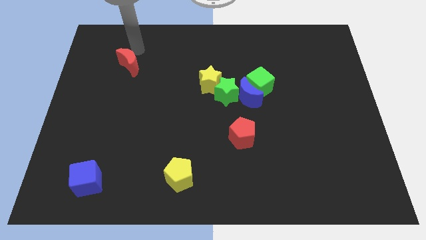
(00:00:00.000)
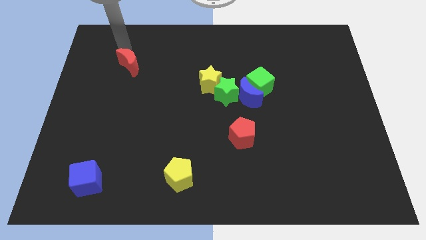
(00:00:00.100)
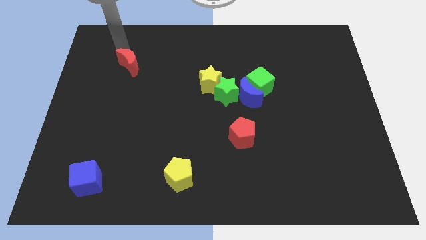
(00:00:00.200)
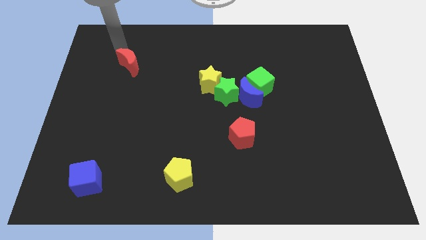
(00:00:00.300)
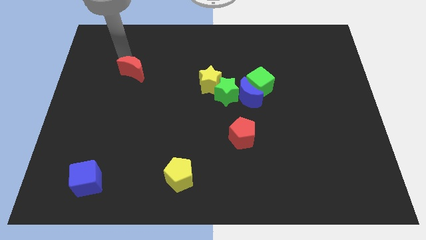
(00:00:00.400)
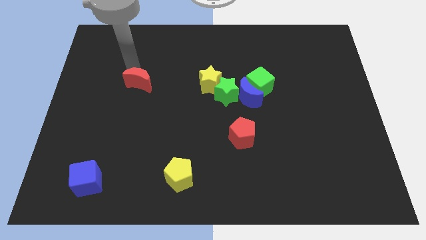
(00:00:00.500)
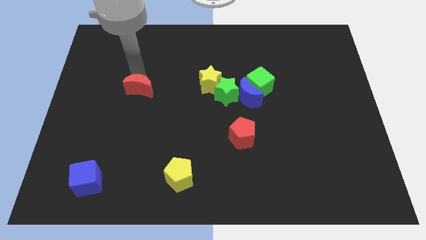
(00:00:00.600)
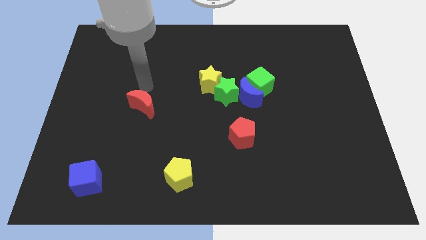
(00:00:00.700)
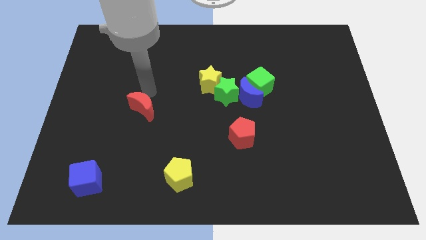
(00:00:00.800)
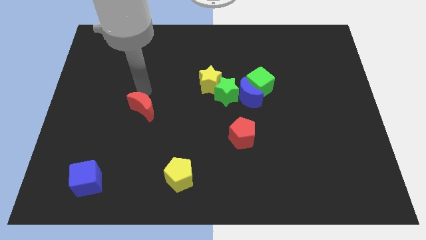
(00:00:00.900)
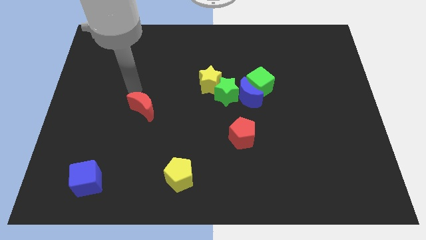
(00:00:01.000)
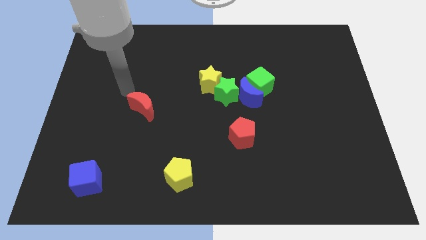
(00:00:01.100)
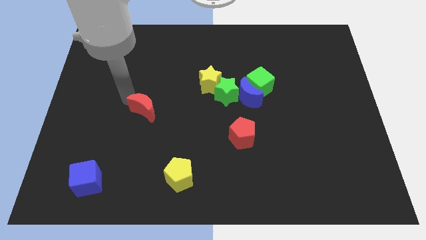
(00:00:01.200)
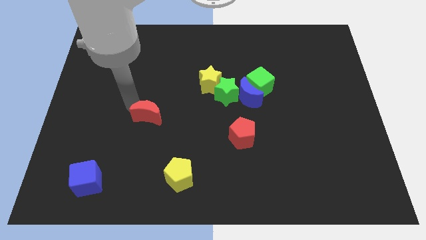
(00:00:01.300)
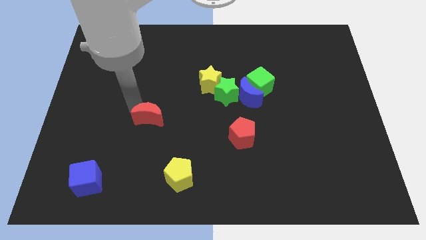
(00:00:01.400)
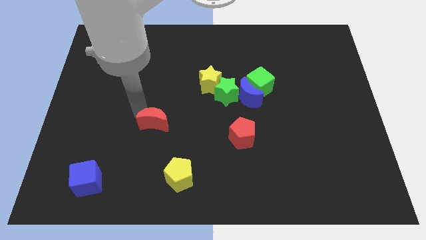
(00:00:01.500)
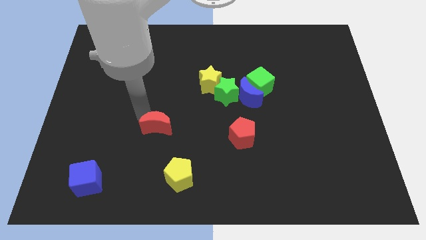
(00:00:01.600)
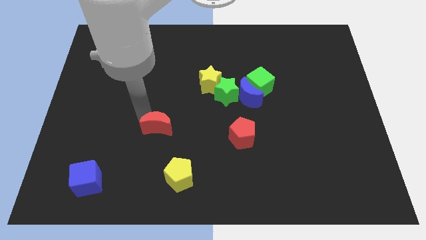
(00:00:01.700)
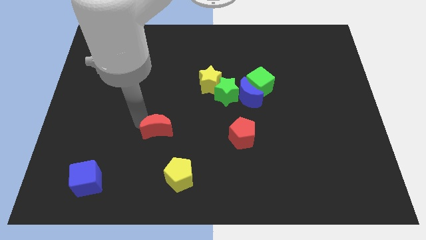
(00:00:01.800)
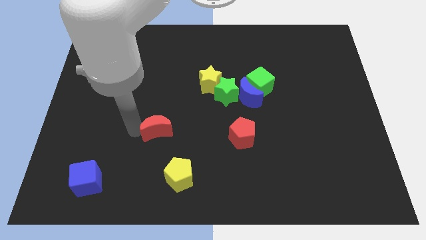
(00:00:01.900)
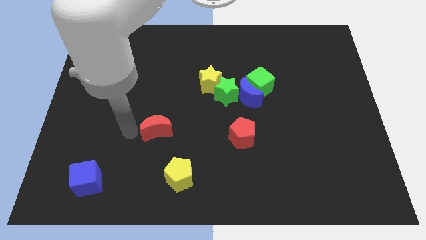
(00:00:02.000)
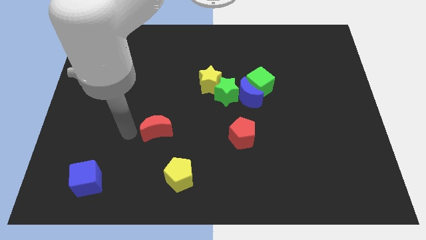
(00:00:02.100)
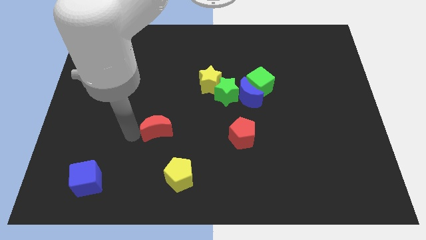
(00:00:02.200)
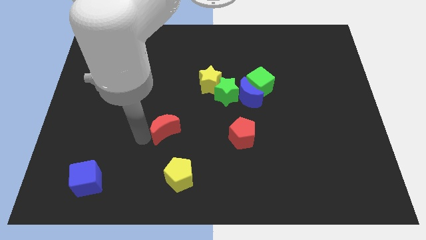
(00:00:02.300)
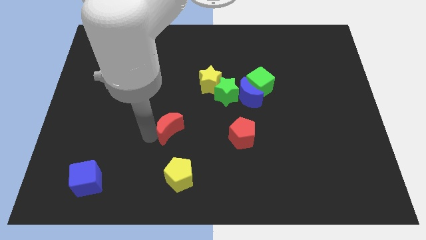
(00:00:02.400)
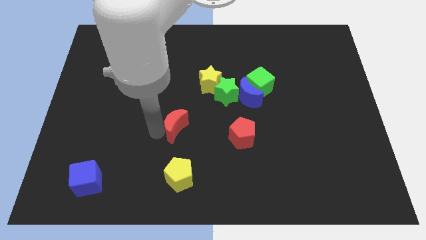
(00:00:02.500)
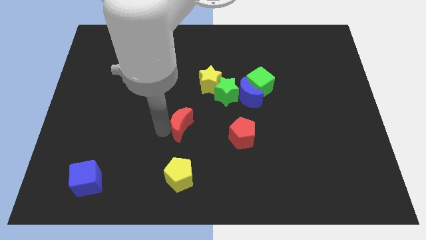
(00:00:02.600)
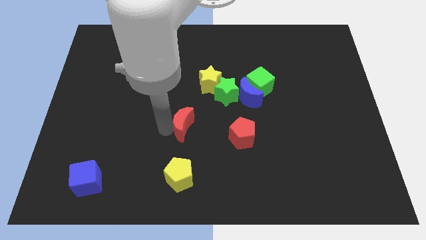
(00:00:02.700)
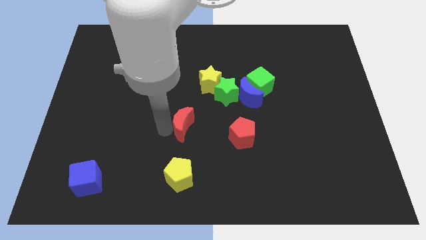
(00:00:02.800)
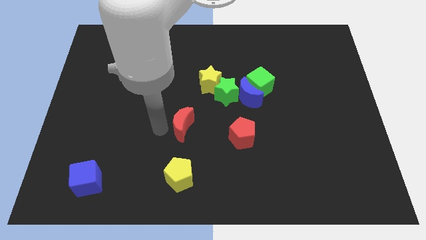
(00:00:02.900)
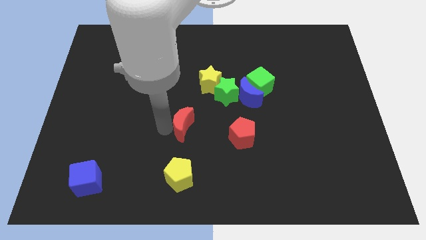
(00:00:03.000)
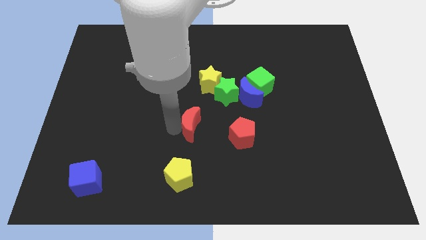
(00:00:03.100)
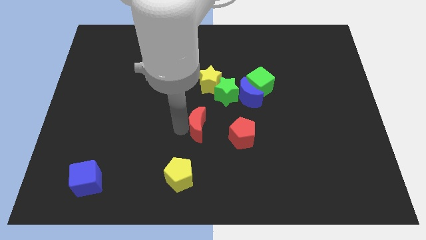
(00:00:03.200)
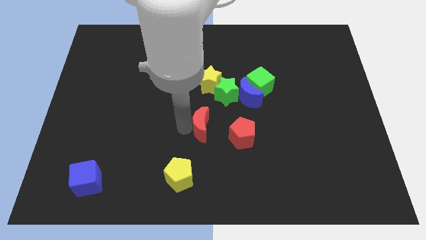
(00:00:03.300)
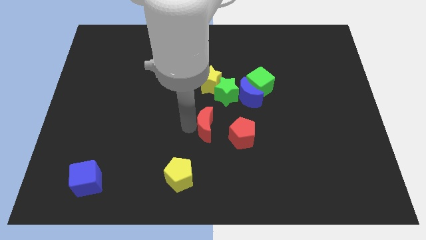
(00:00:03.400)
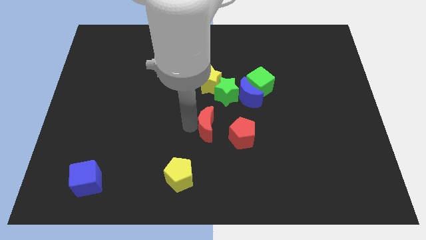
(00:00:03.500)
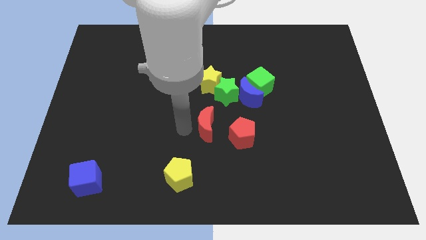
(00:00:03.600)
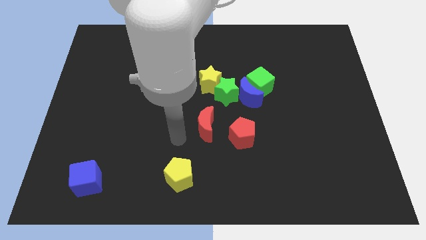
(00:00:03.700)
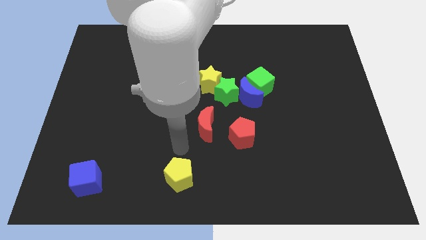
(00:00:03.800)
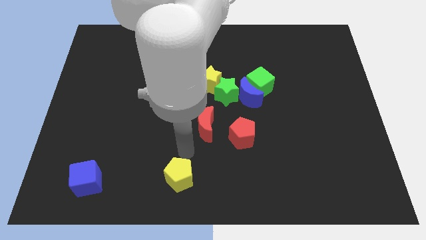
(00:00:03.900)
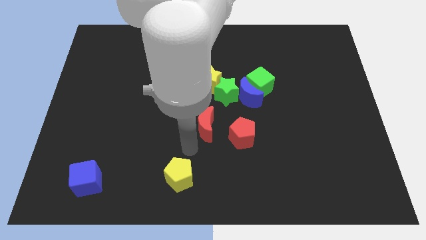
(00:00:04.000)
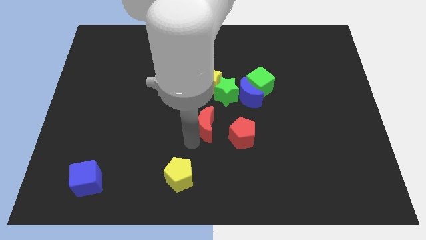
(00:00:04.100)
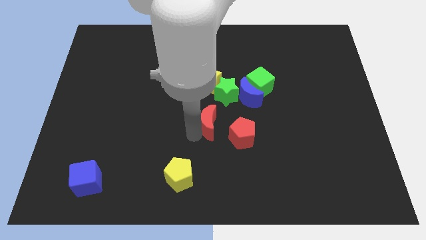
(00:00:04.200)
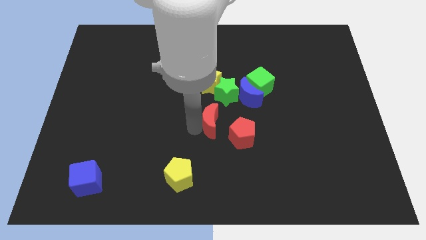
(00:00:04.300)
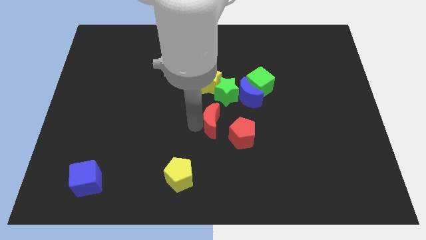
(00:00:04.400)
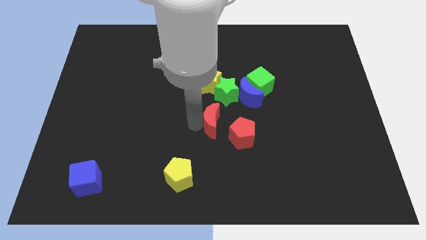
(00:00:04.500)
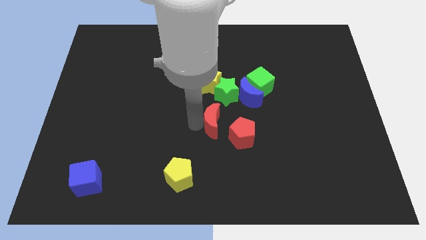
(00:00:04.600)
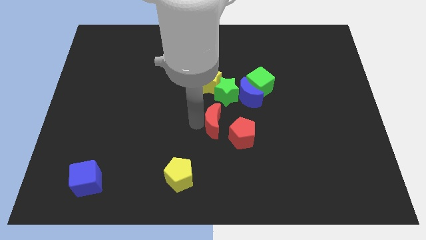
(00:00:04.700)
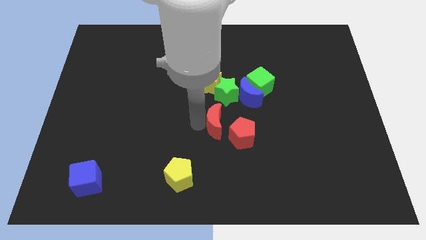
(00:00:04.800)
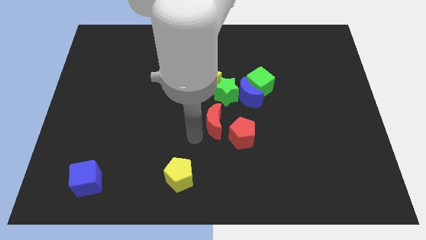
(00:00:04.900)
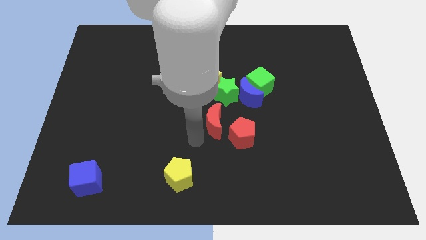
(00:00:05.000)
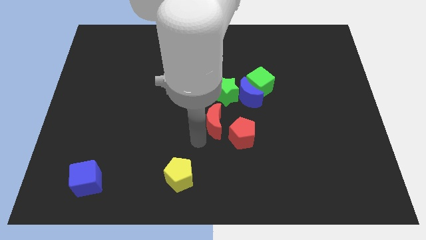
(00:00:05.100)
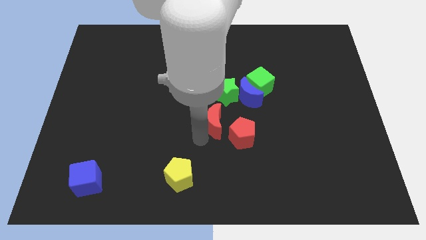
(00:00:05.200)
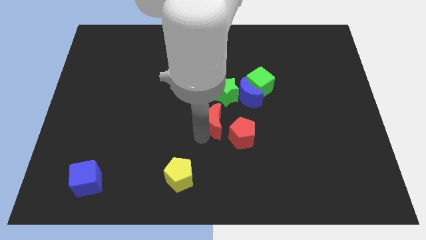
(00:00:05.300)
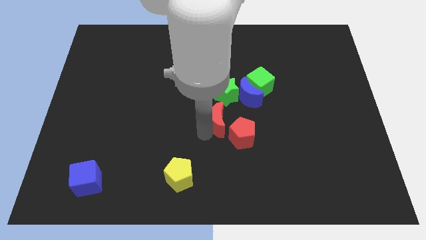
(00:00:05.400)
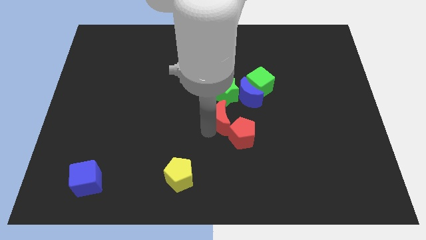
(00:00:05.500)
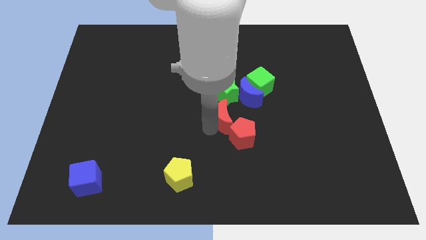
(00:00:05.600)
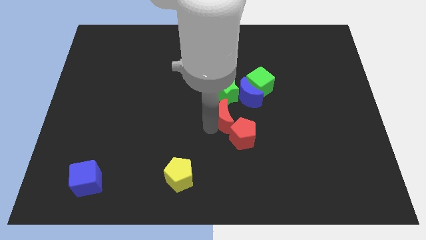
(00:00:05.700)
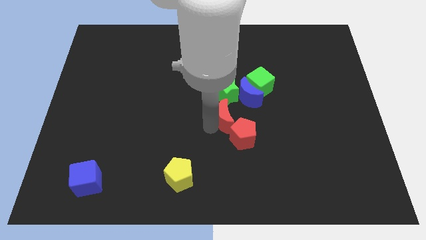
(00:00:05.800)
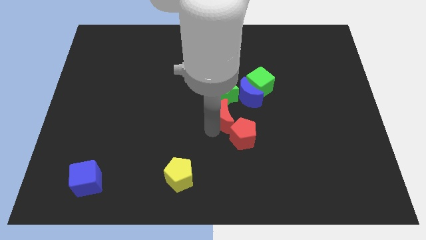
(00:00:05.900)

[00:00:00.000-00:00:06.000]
drag red moon between green star and red pentagon

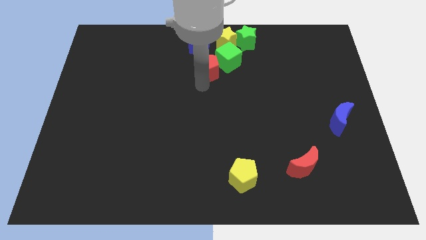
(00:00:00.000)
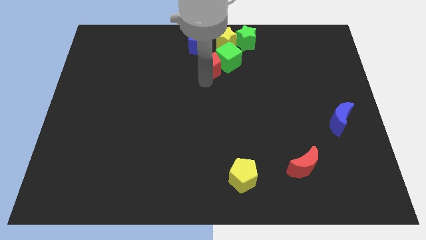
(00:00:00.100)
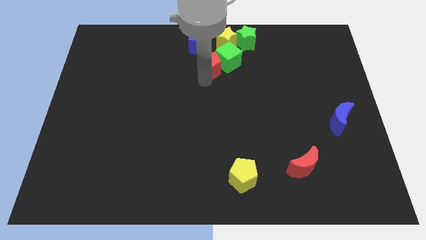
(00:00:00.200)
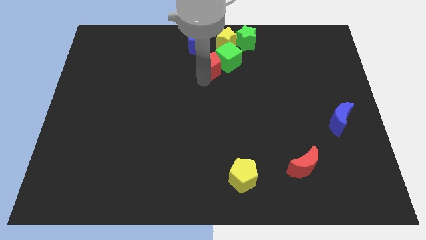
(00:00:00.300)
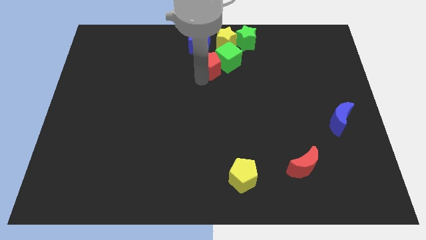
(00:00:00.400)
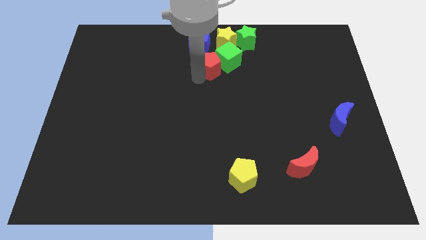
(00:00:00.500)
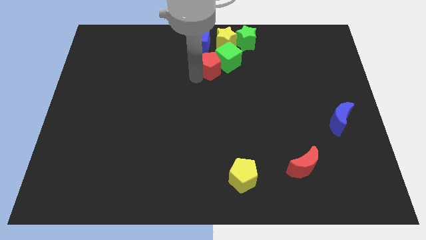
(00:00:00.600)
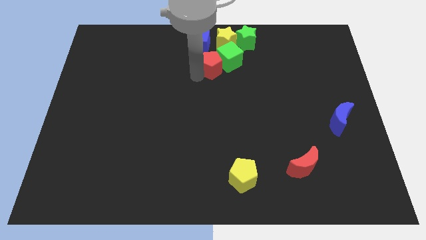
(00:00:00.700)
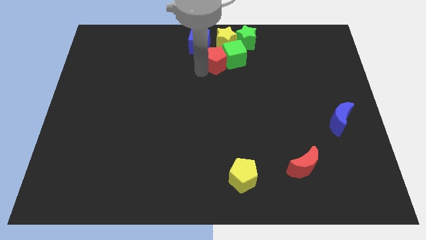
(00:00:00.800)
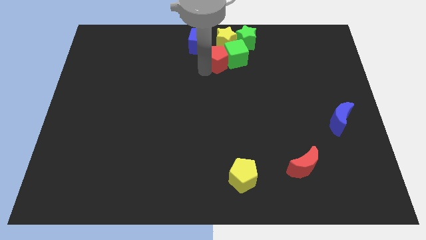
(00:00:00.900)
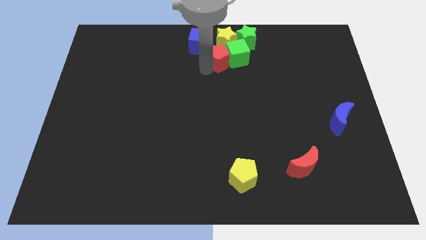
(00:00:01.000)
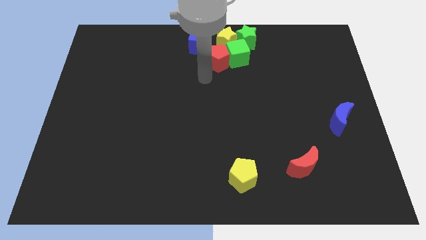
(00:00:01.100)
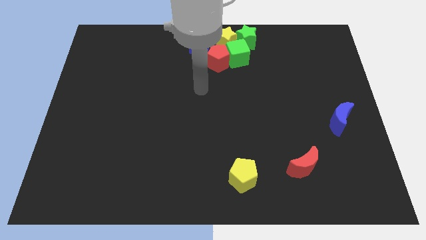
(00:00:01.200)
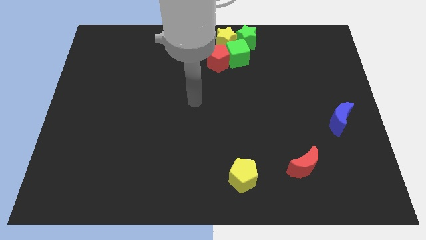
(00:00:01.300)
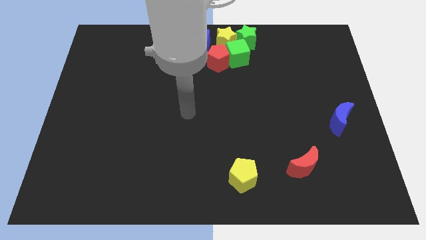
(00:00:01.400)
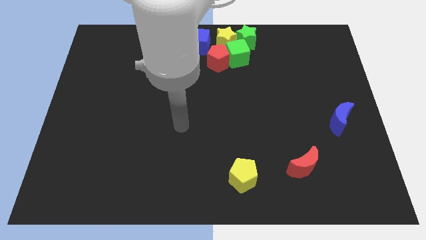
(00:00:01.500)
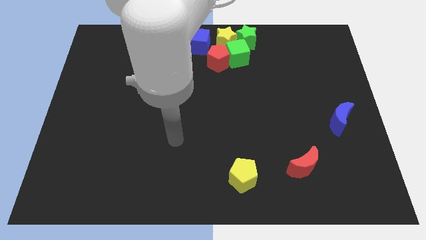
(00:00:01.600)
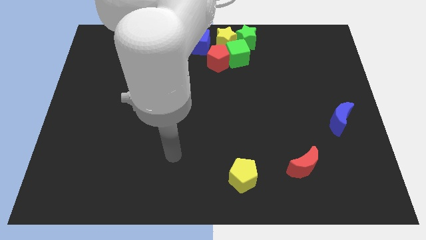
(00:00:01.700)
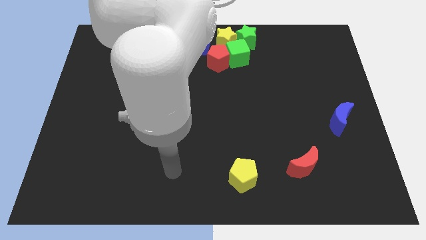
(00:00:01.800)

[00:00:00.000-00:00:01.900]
place the red pentagon left to the green cube

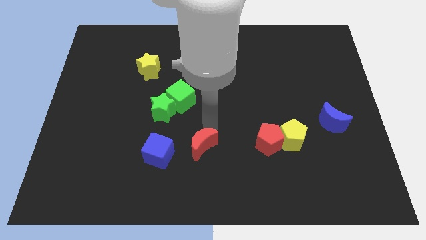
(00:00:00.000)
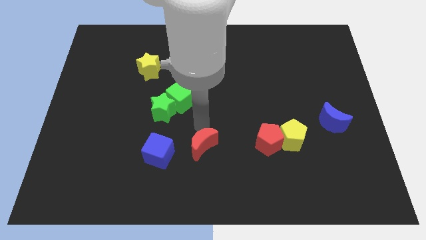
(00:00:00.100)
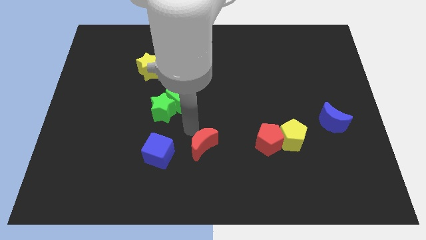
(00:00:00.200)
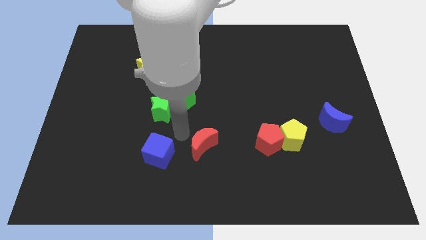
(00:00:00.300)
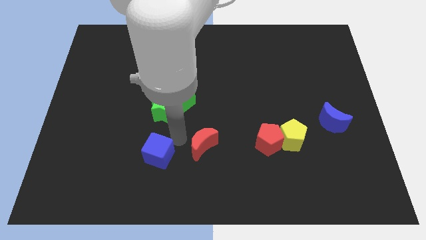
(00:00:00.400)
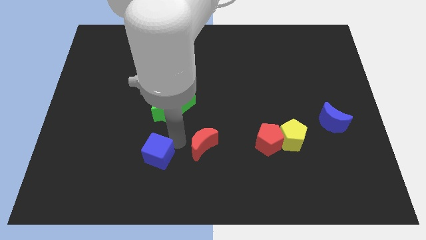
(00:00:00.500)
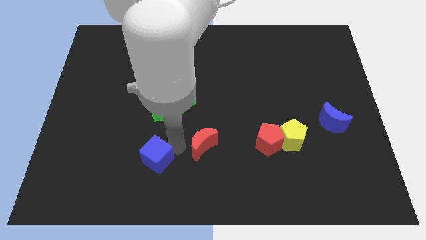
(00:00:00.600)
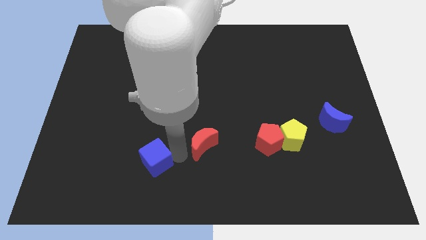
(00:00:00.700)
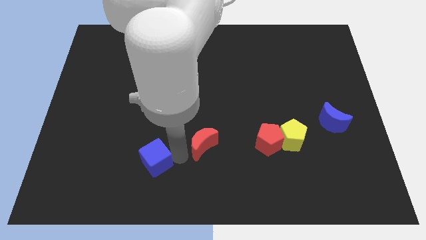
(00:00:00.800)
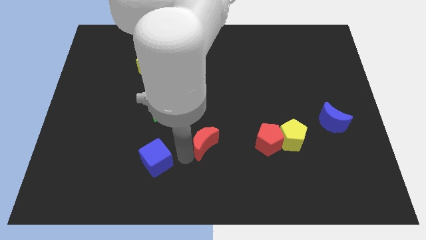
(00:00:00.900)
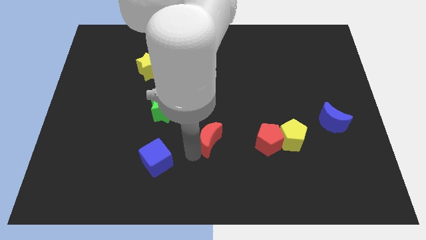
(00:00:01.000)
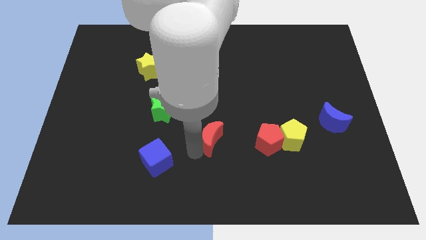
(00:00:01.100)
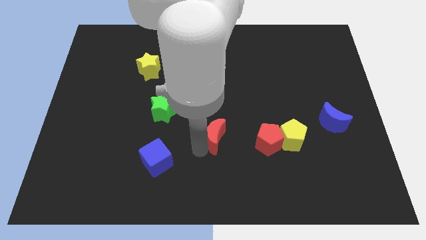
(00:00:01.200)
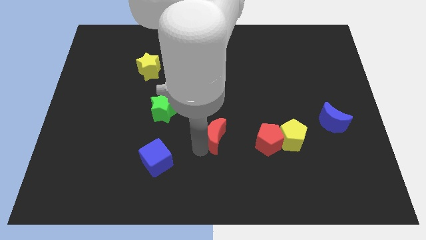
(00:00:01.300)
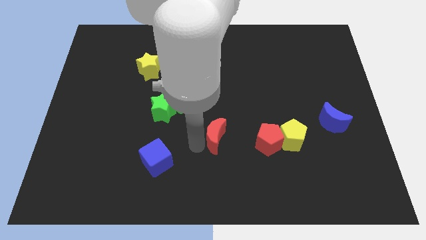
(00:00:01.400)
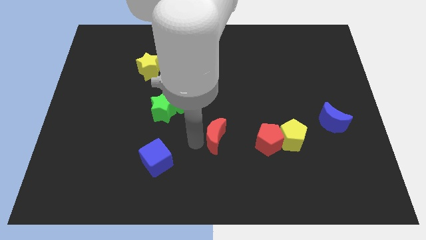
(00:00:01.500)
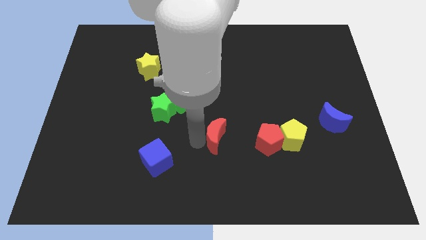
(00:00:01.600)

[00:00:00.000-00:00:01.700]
move the red crescent diagonally on the top right side of the blue cube
